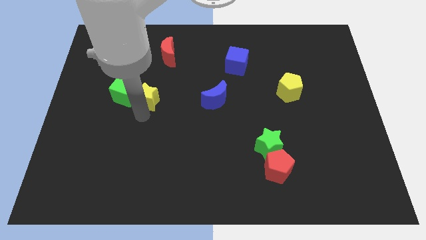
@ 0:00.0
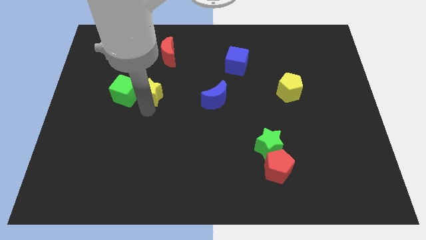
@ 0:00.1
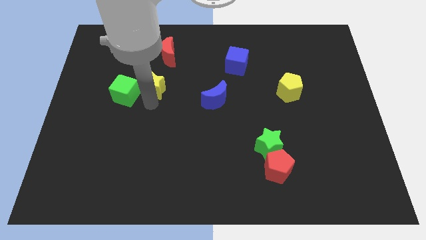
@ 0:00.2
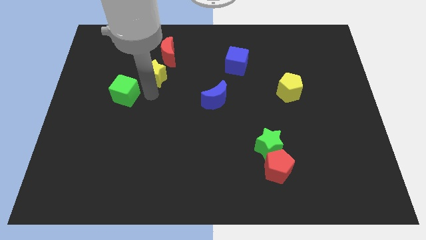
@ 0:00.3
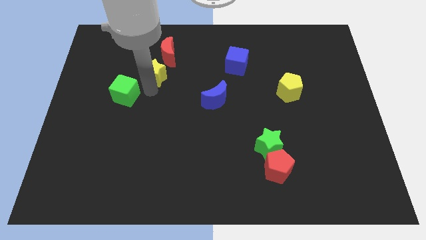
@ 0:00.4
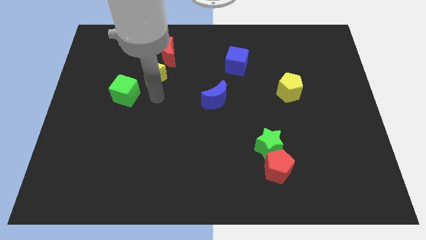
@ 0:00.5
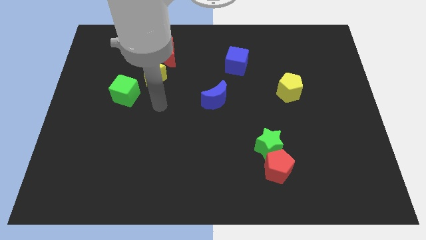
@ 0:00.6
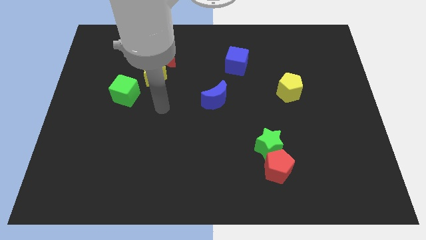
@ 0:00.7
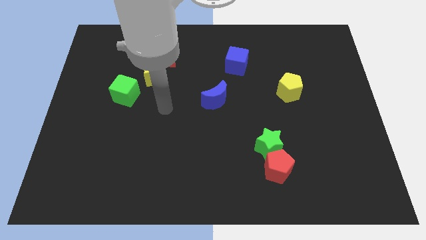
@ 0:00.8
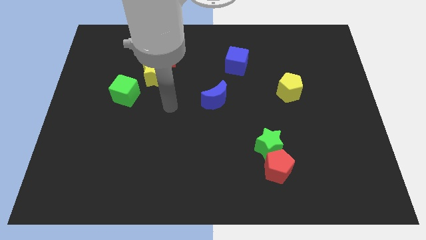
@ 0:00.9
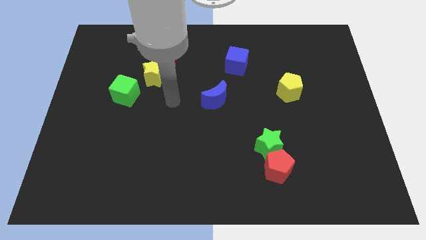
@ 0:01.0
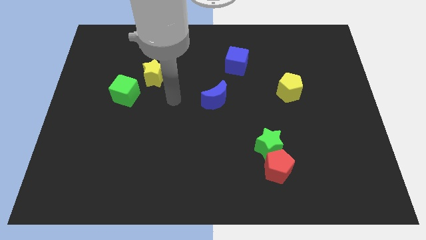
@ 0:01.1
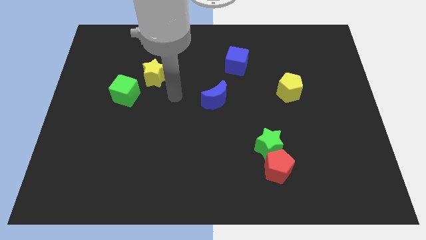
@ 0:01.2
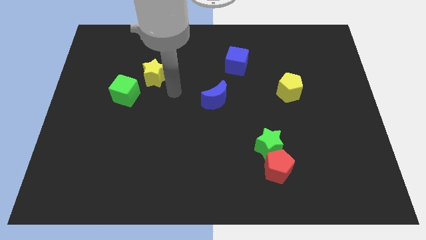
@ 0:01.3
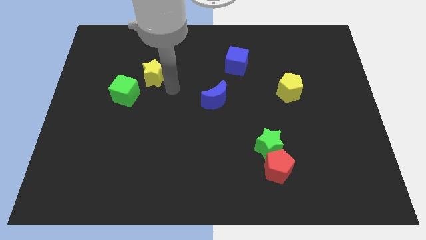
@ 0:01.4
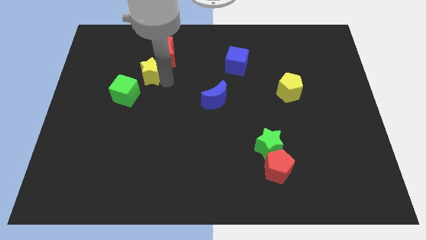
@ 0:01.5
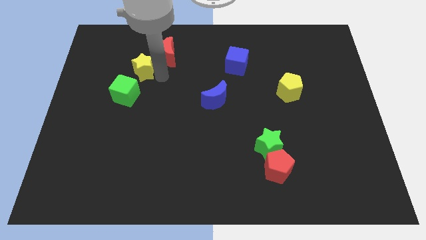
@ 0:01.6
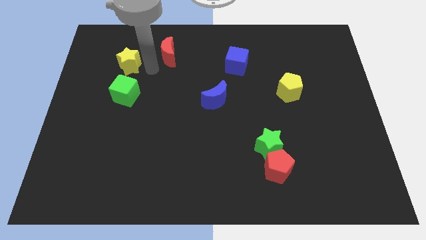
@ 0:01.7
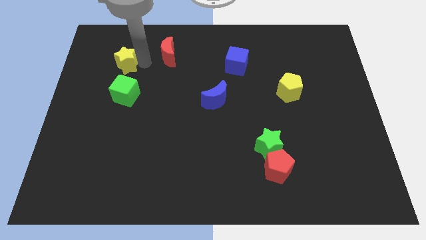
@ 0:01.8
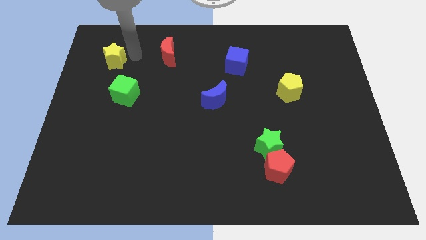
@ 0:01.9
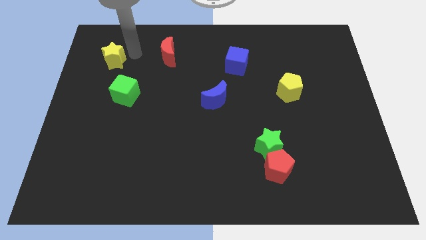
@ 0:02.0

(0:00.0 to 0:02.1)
push the yellow star left to the red moon

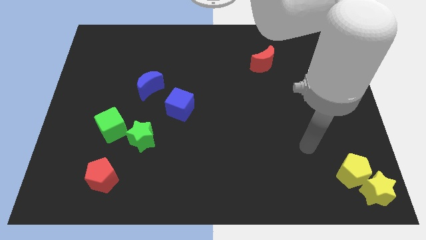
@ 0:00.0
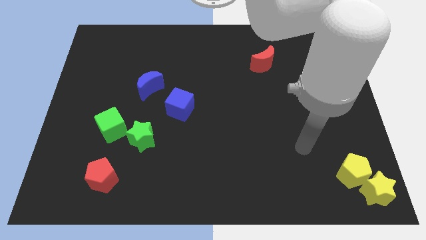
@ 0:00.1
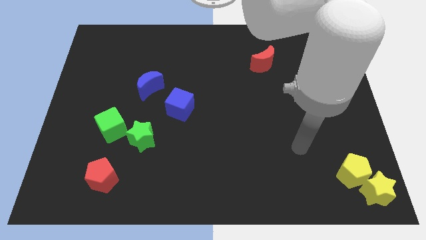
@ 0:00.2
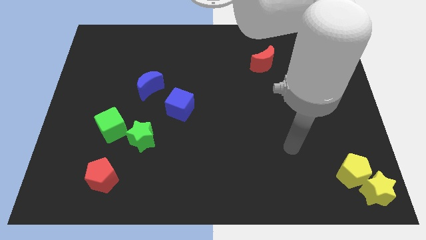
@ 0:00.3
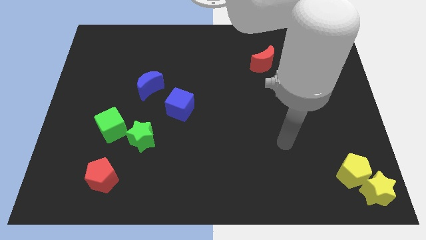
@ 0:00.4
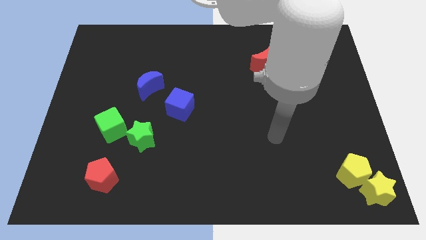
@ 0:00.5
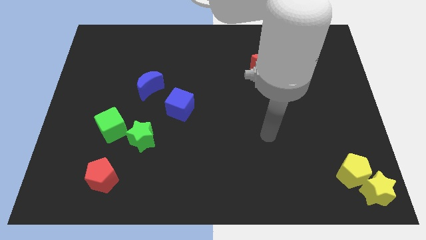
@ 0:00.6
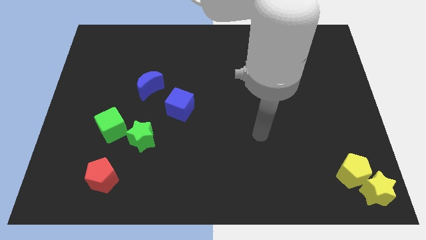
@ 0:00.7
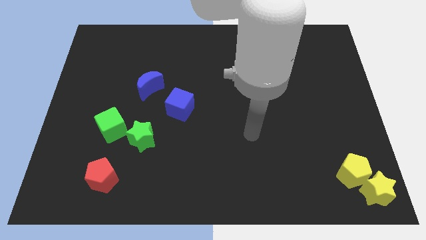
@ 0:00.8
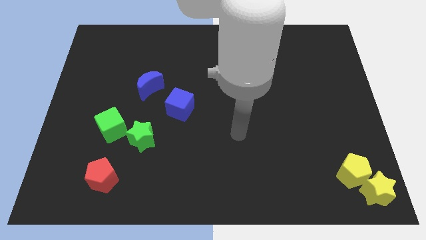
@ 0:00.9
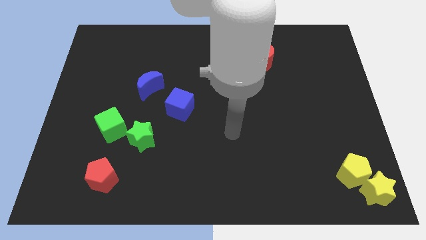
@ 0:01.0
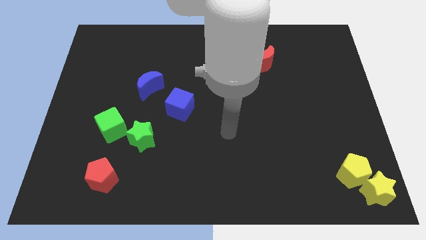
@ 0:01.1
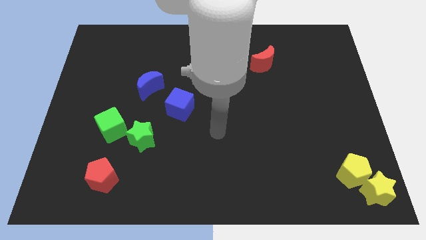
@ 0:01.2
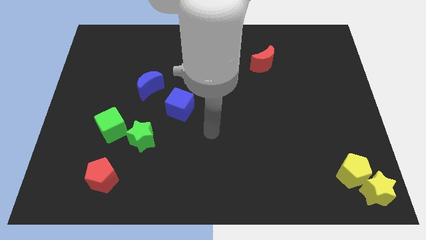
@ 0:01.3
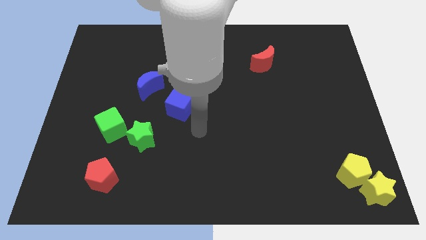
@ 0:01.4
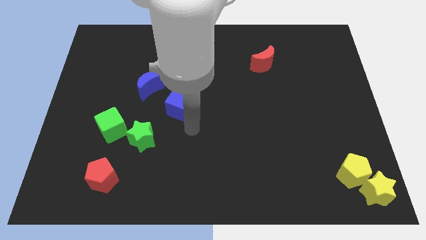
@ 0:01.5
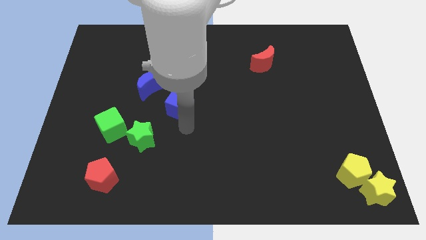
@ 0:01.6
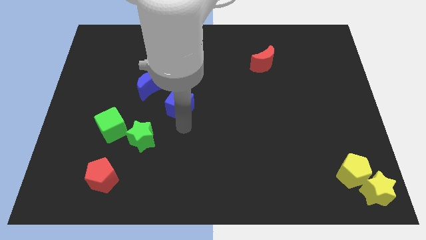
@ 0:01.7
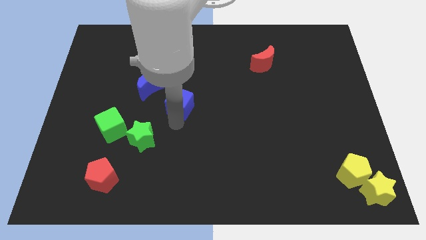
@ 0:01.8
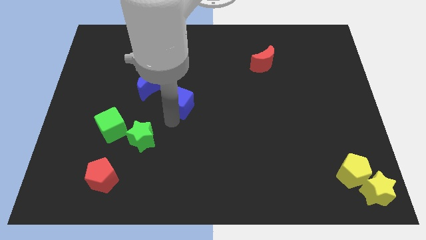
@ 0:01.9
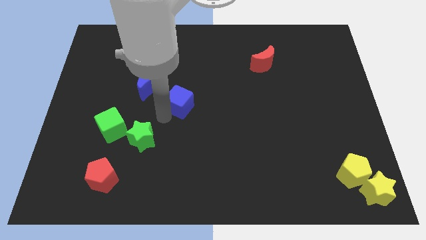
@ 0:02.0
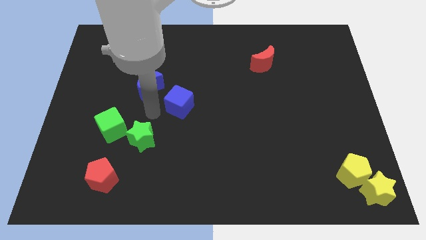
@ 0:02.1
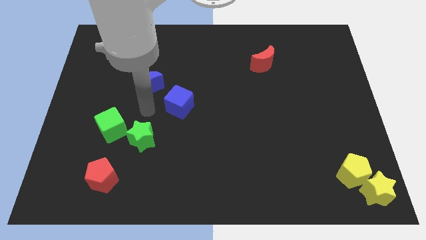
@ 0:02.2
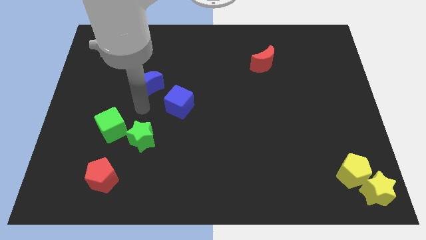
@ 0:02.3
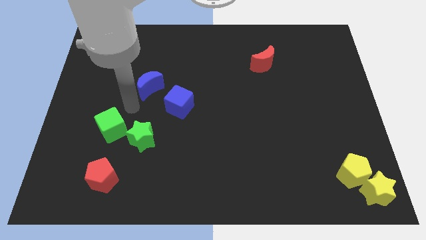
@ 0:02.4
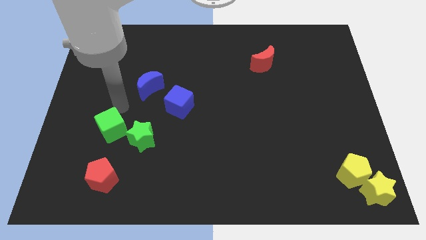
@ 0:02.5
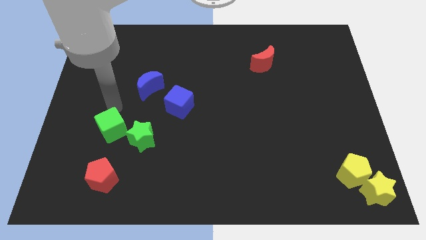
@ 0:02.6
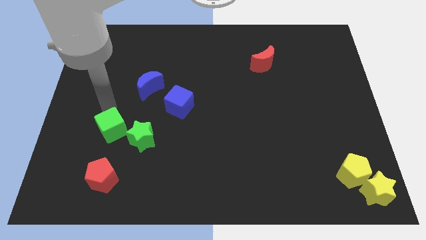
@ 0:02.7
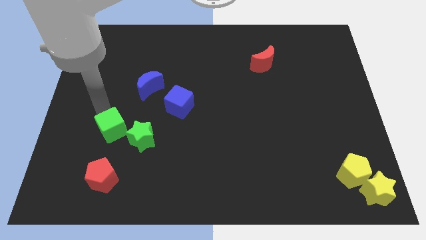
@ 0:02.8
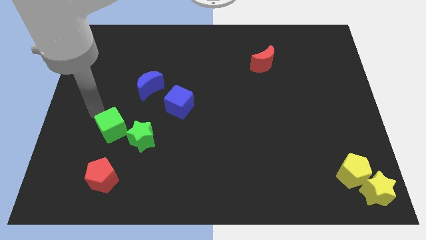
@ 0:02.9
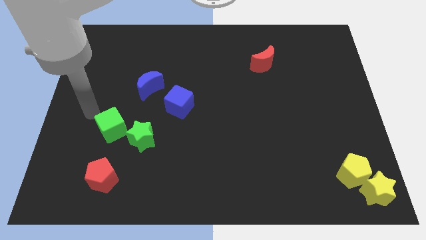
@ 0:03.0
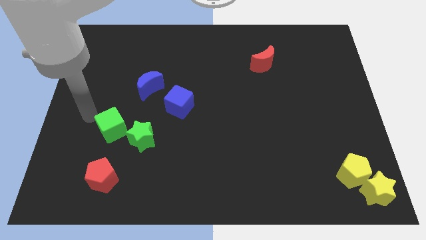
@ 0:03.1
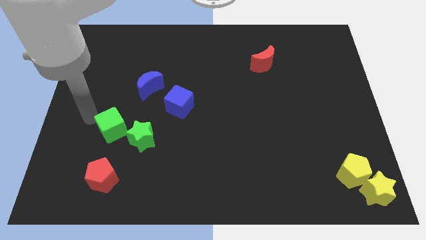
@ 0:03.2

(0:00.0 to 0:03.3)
touch blue cube with your arm

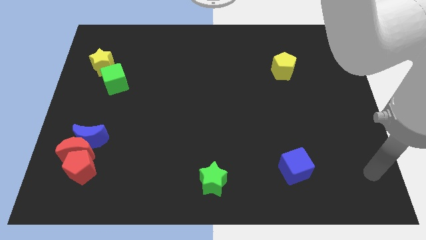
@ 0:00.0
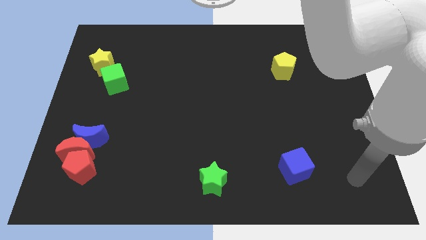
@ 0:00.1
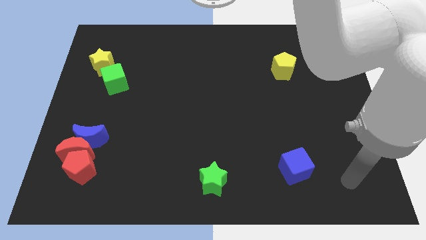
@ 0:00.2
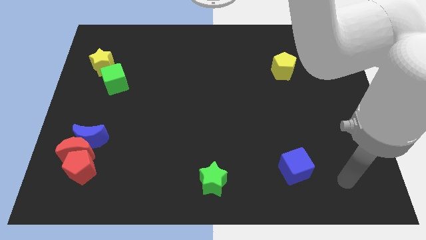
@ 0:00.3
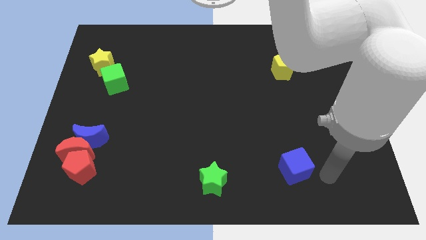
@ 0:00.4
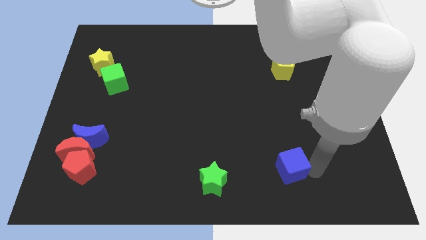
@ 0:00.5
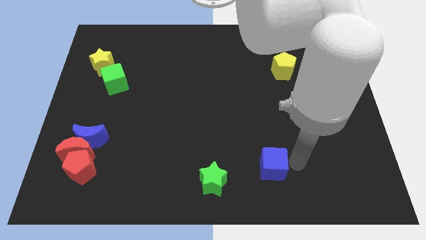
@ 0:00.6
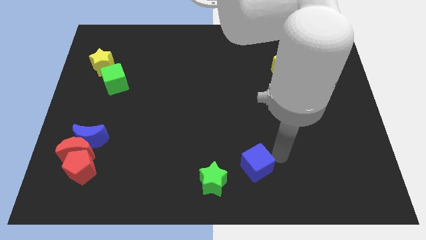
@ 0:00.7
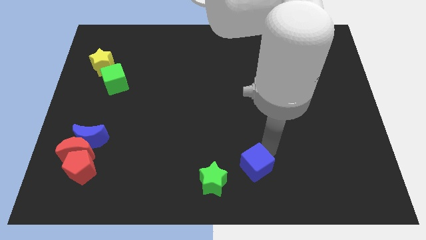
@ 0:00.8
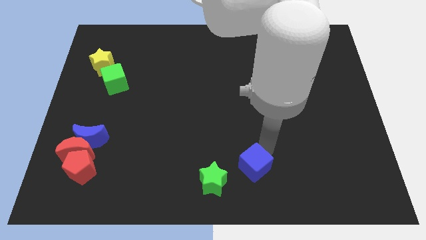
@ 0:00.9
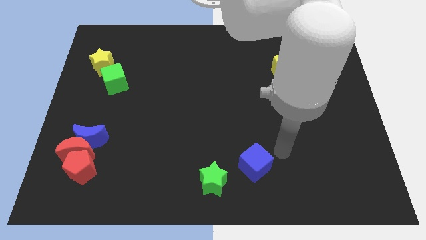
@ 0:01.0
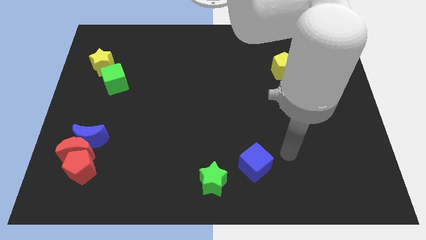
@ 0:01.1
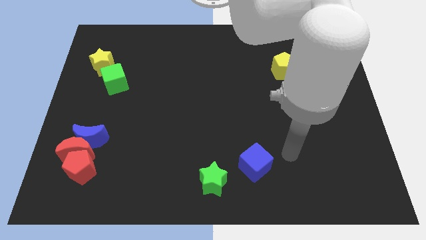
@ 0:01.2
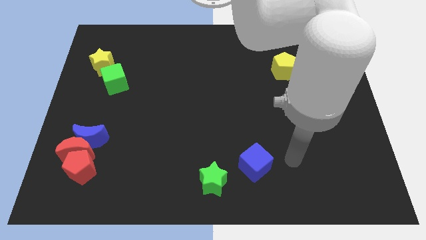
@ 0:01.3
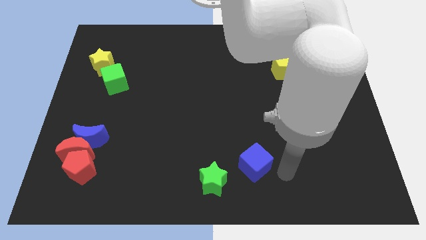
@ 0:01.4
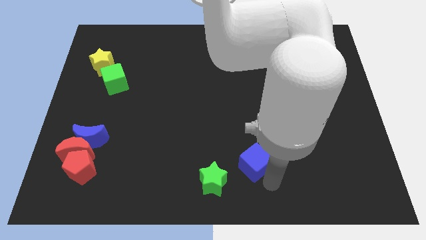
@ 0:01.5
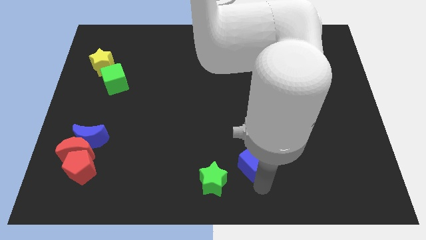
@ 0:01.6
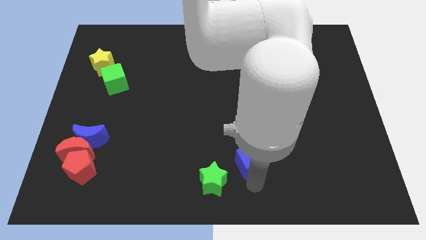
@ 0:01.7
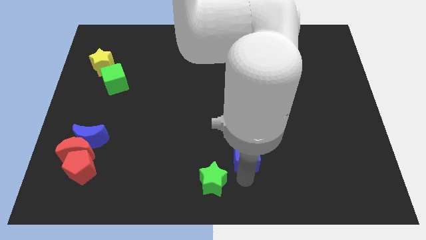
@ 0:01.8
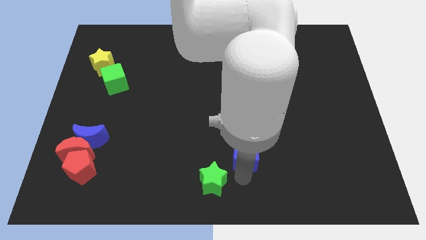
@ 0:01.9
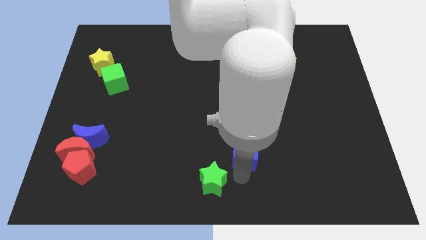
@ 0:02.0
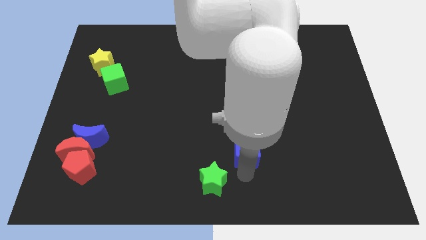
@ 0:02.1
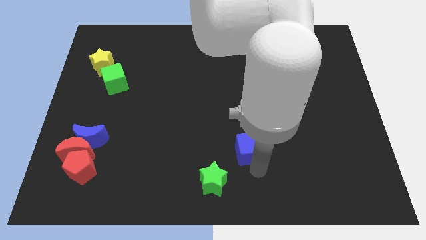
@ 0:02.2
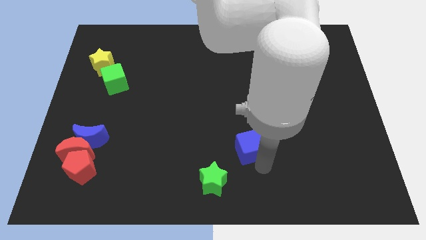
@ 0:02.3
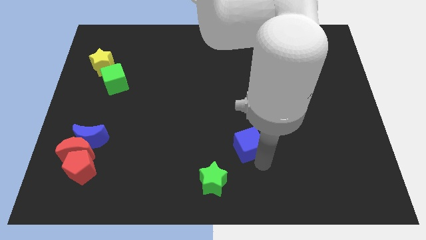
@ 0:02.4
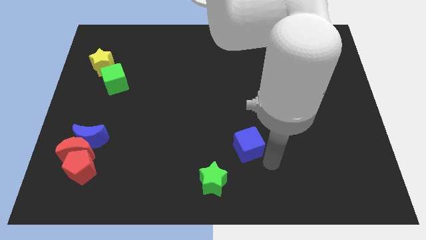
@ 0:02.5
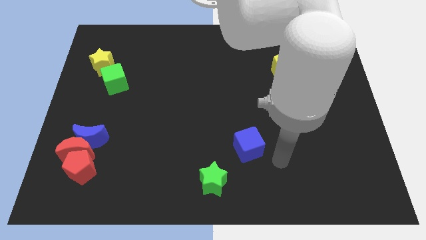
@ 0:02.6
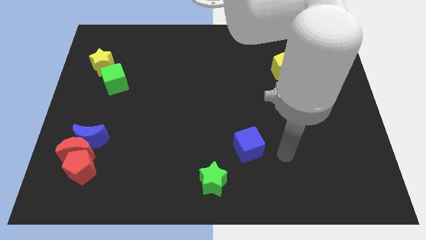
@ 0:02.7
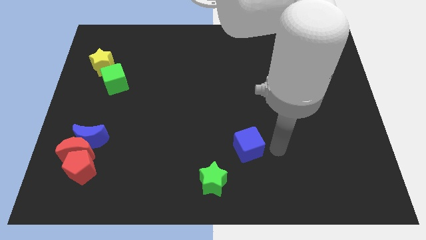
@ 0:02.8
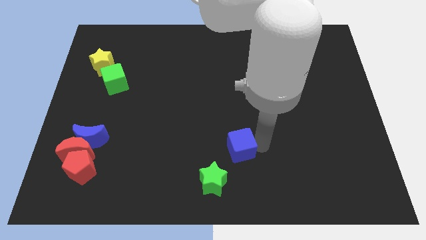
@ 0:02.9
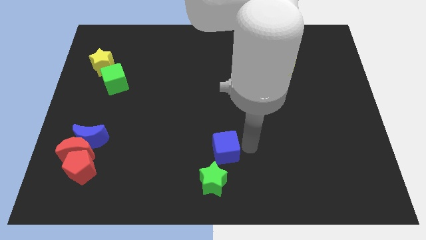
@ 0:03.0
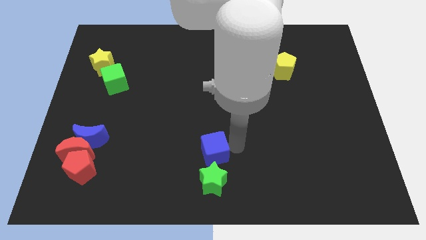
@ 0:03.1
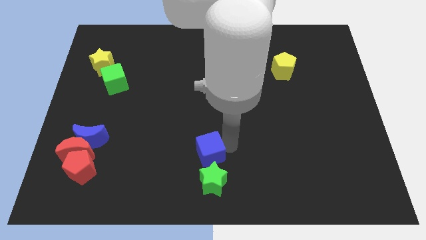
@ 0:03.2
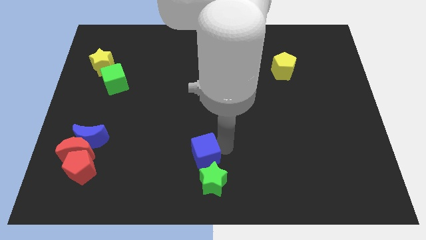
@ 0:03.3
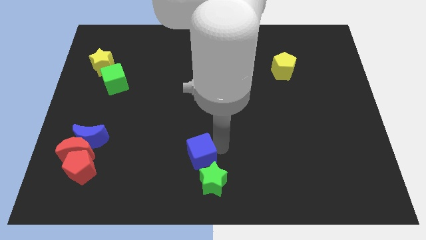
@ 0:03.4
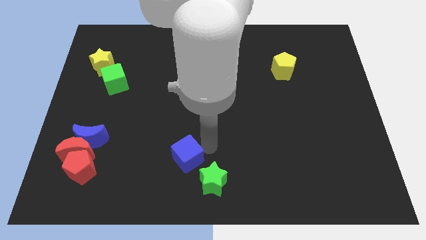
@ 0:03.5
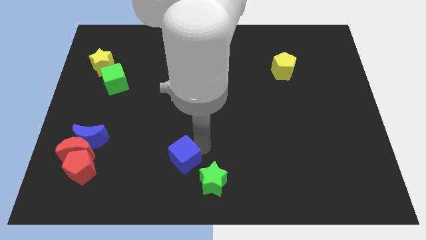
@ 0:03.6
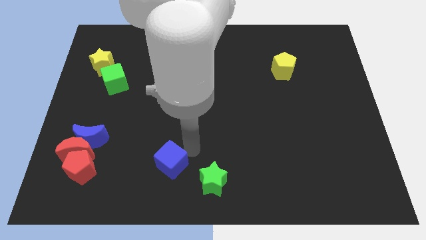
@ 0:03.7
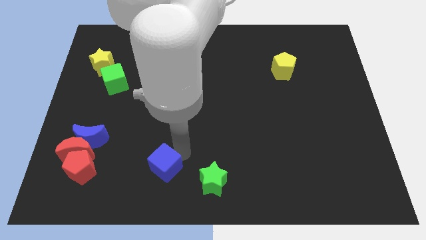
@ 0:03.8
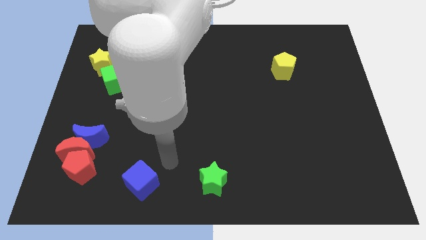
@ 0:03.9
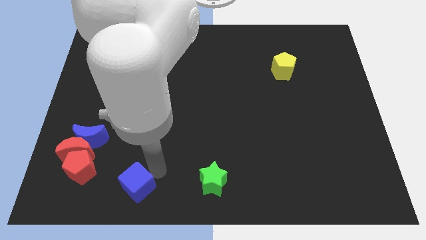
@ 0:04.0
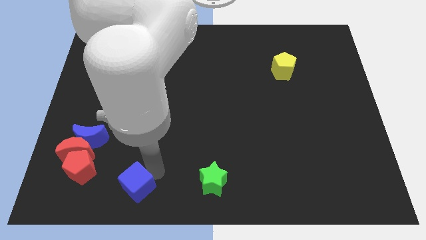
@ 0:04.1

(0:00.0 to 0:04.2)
move the blue cube to the left of the green star
